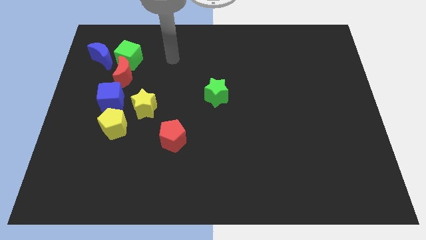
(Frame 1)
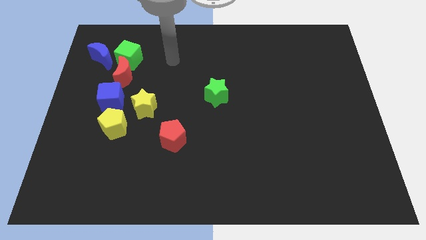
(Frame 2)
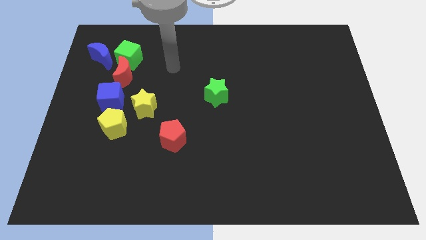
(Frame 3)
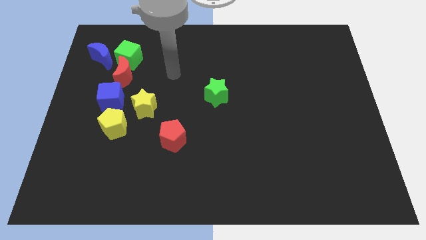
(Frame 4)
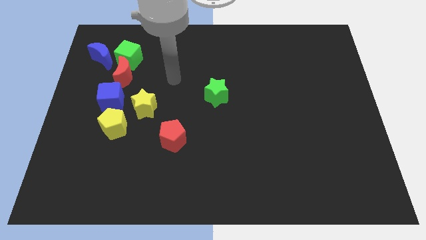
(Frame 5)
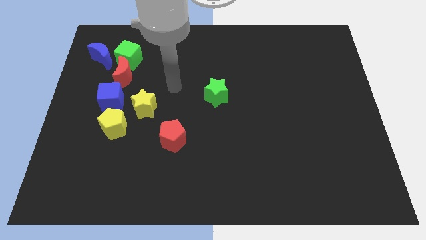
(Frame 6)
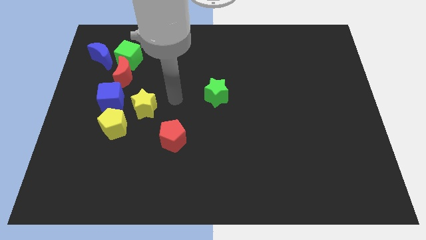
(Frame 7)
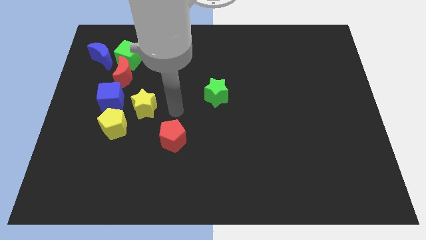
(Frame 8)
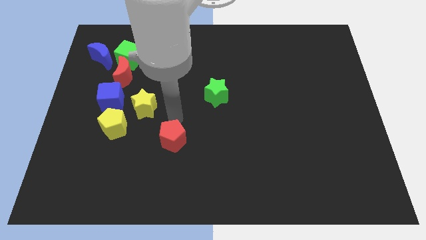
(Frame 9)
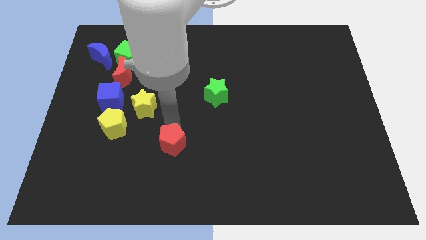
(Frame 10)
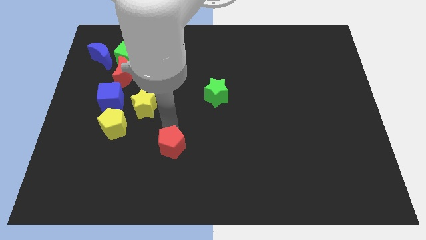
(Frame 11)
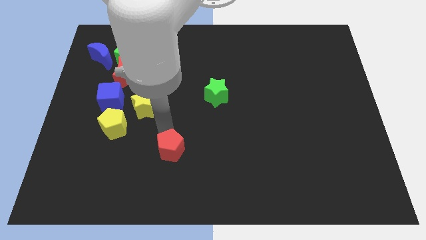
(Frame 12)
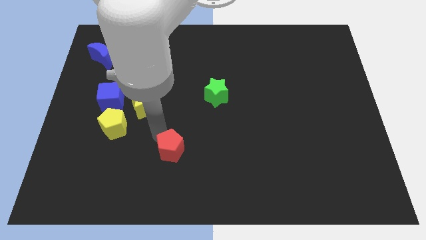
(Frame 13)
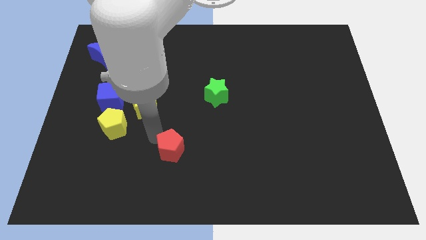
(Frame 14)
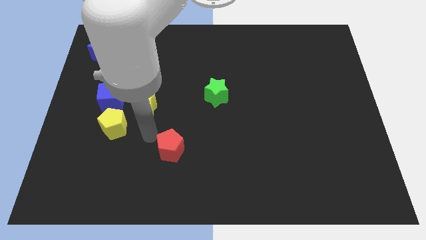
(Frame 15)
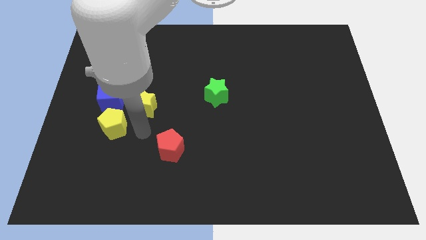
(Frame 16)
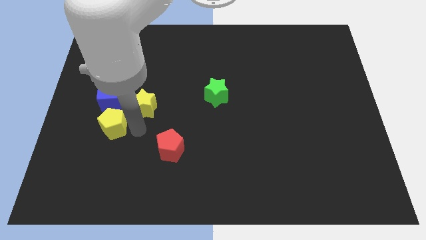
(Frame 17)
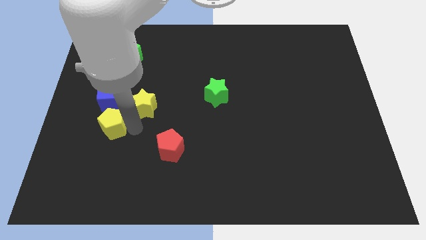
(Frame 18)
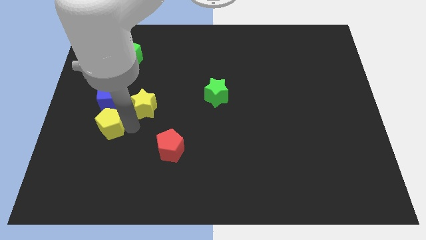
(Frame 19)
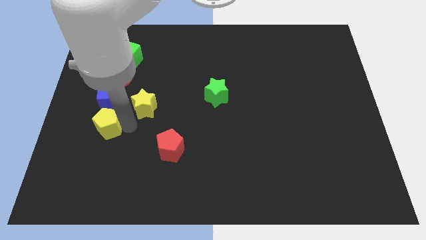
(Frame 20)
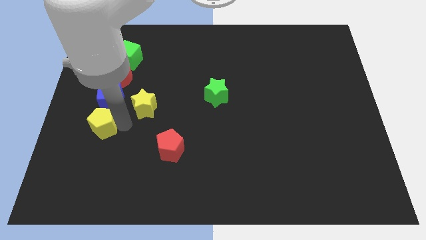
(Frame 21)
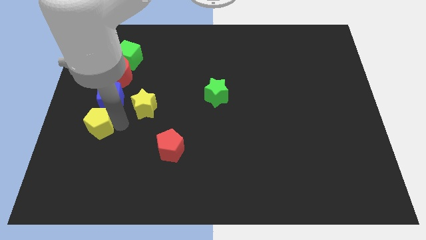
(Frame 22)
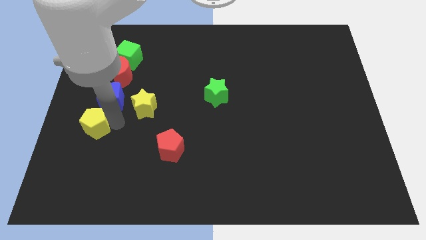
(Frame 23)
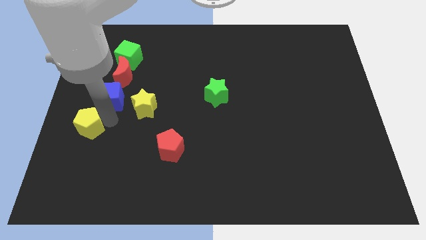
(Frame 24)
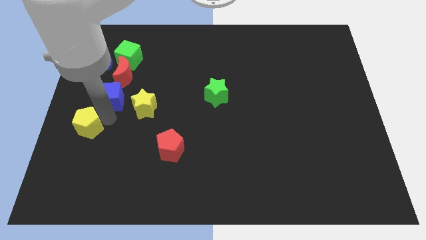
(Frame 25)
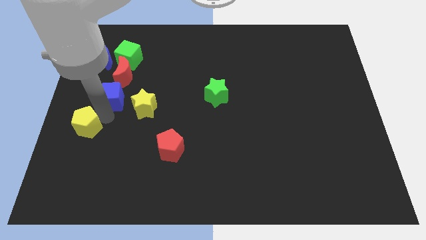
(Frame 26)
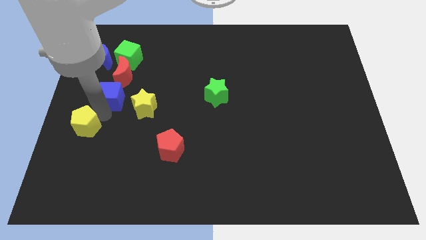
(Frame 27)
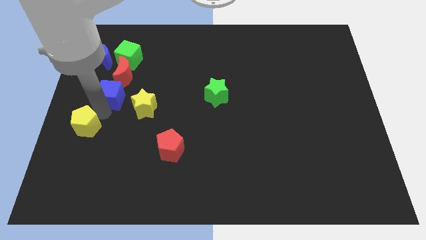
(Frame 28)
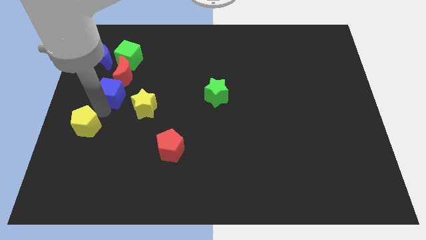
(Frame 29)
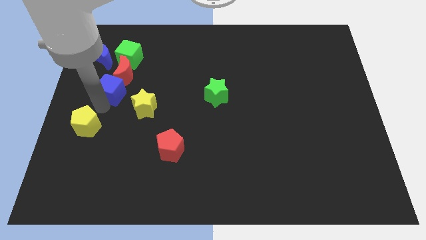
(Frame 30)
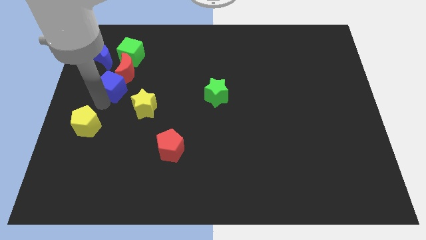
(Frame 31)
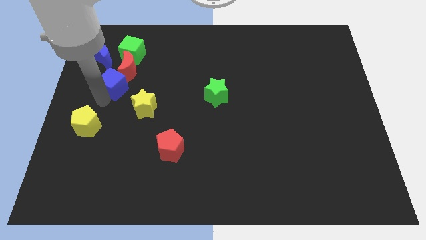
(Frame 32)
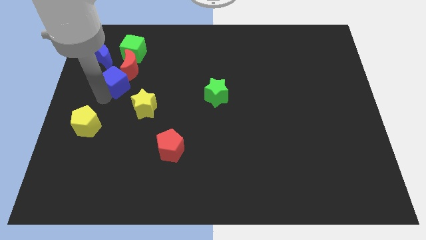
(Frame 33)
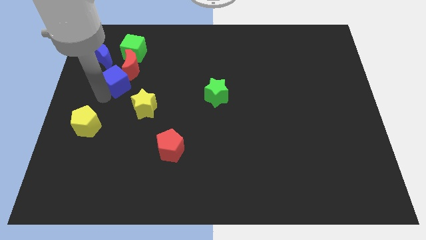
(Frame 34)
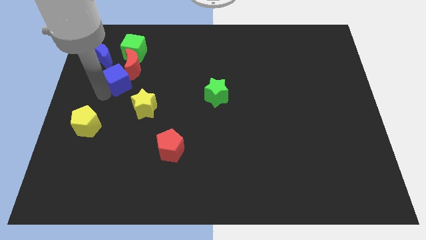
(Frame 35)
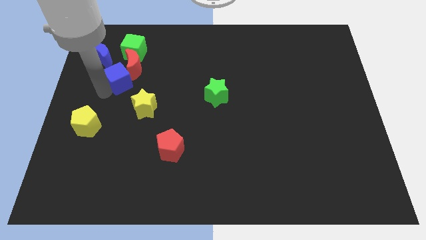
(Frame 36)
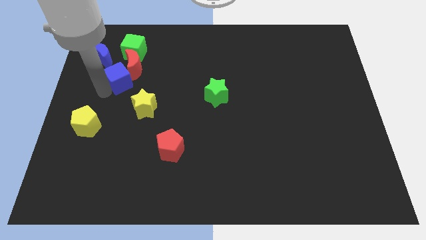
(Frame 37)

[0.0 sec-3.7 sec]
slide the blue cube to the red moon

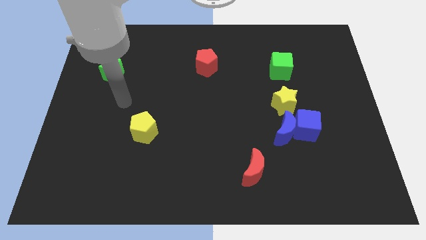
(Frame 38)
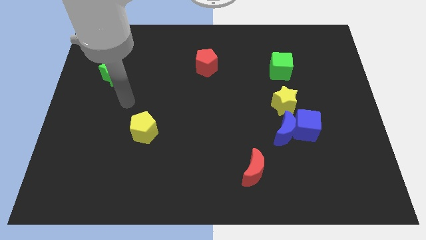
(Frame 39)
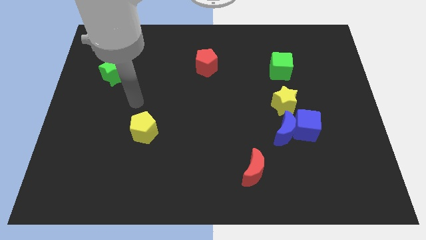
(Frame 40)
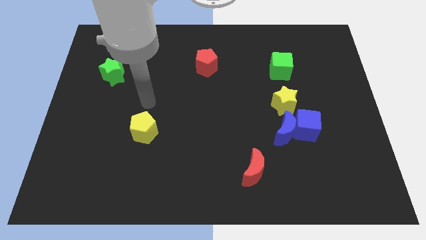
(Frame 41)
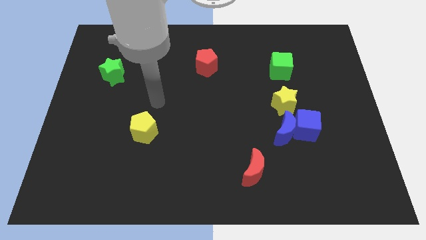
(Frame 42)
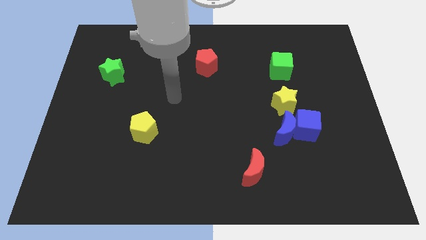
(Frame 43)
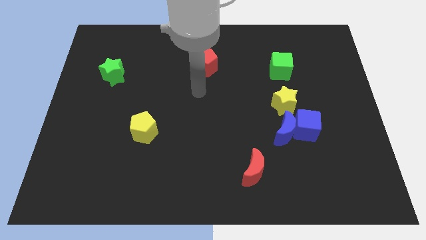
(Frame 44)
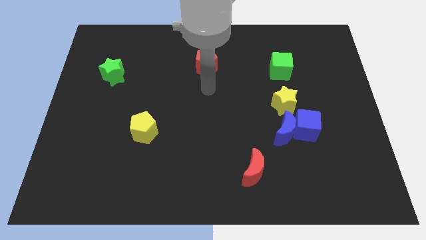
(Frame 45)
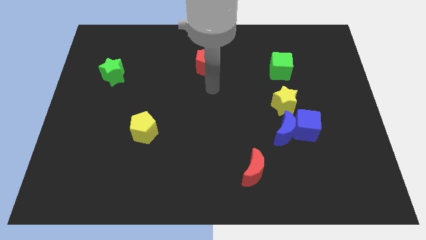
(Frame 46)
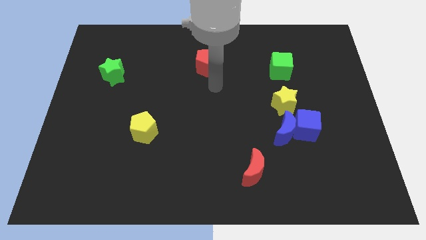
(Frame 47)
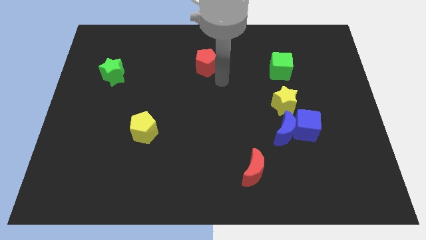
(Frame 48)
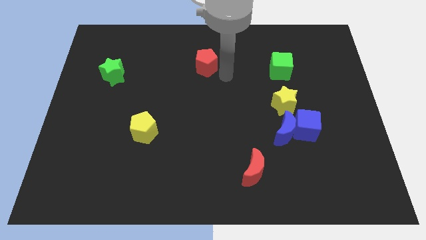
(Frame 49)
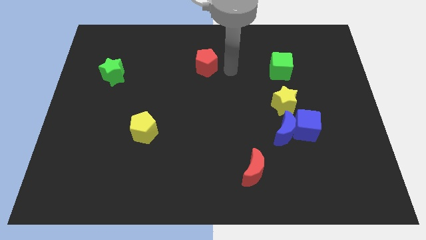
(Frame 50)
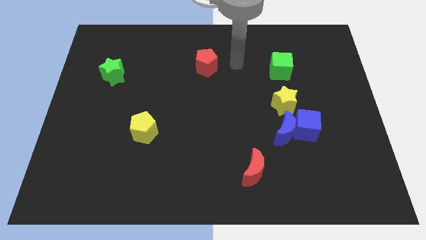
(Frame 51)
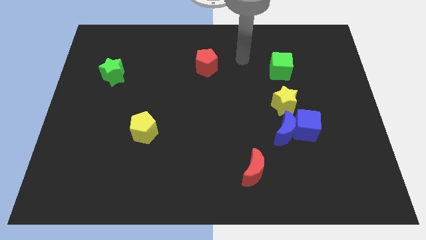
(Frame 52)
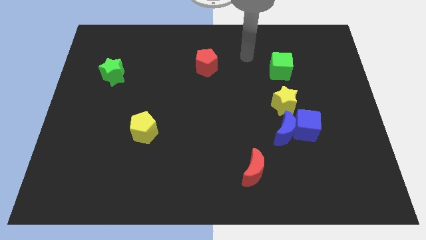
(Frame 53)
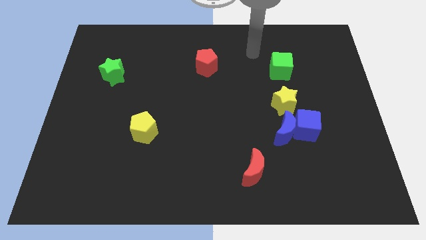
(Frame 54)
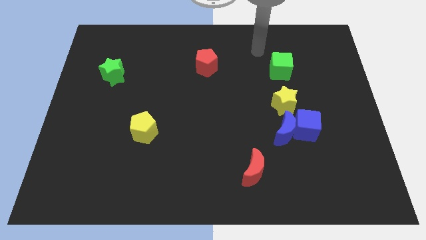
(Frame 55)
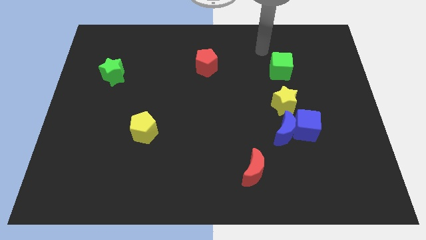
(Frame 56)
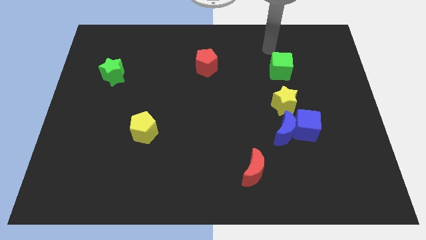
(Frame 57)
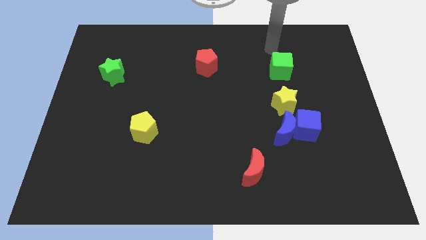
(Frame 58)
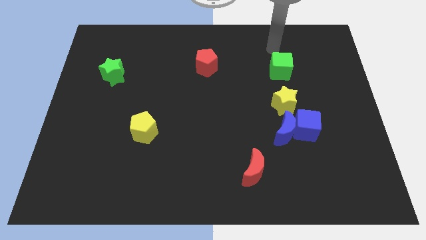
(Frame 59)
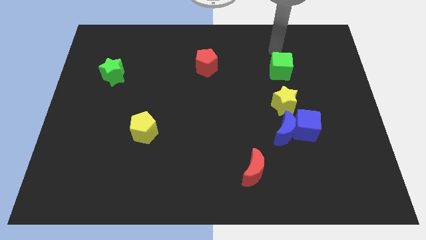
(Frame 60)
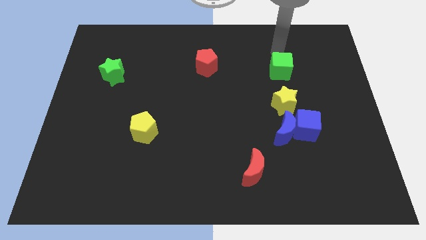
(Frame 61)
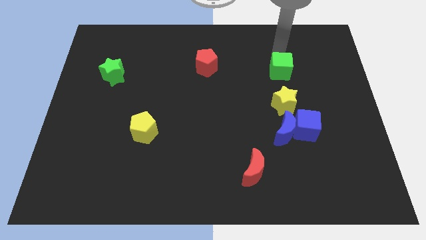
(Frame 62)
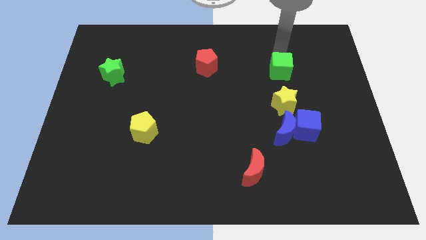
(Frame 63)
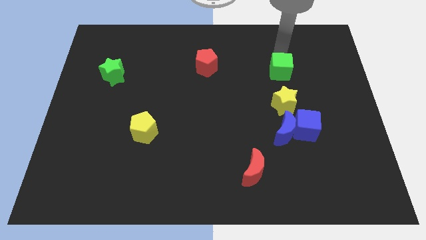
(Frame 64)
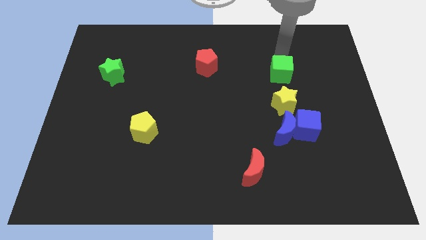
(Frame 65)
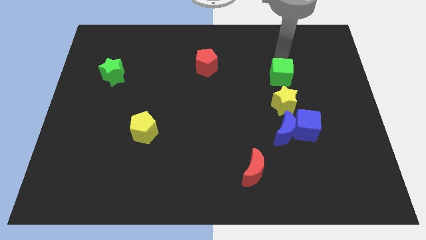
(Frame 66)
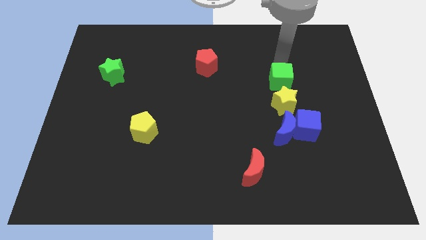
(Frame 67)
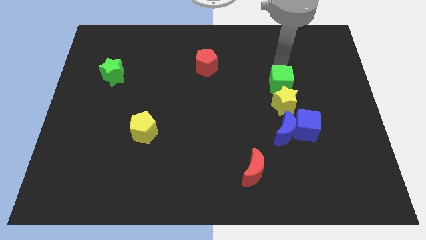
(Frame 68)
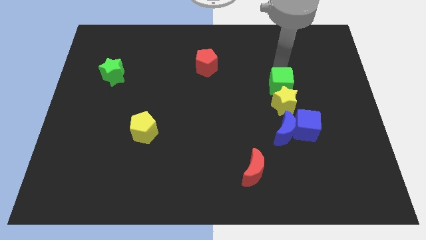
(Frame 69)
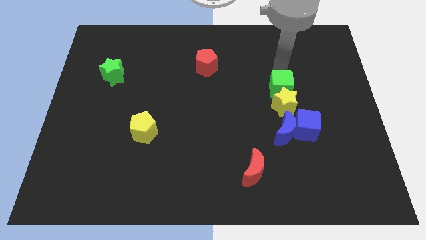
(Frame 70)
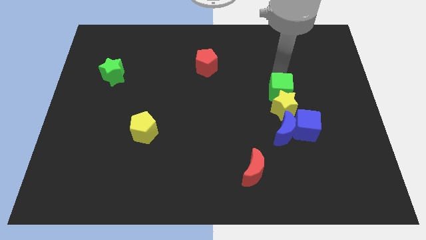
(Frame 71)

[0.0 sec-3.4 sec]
move the green cube close to the yellow star

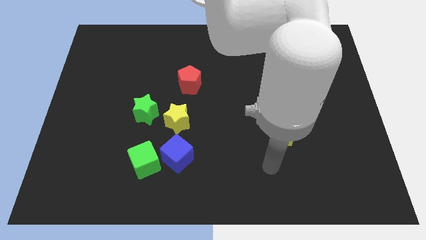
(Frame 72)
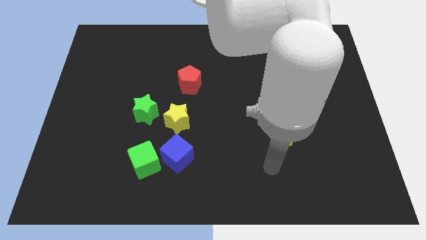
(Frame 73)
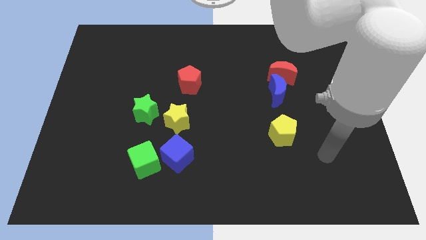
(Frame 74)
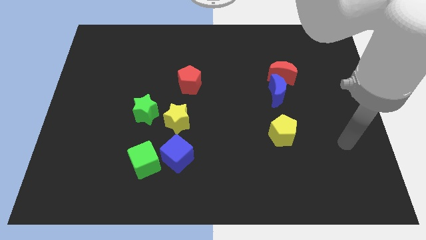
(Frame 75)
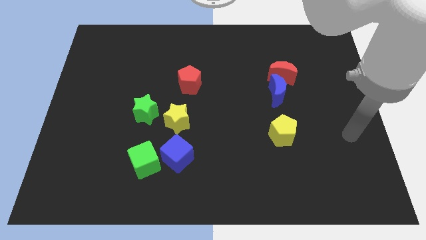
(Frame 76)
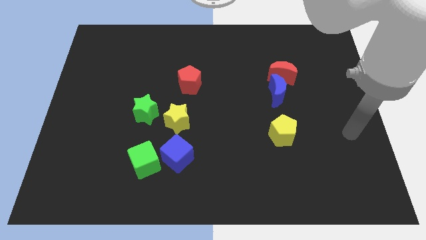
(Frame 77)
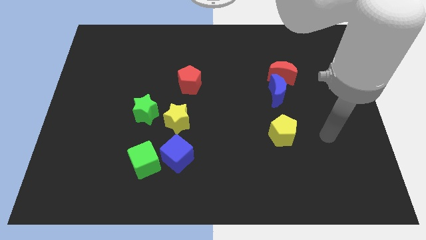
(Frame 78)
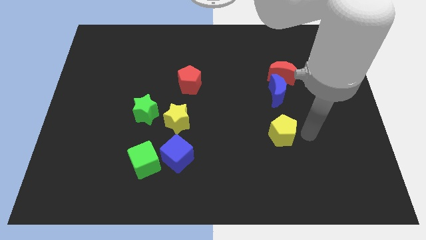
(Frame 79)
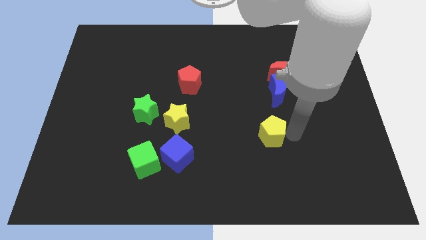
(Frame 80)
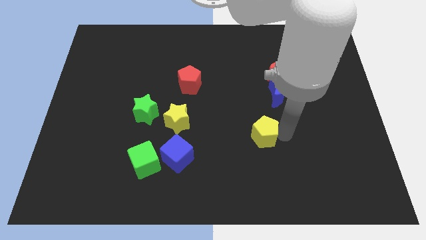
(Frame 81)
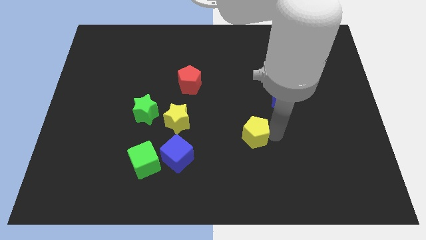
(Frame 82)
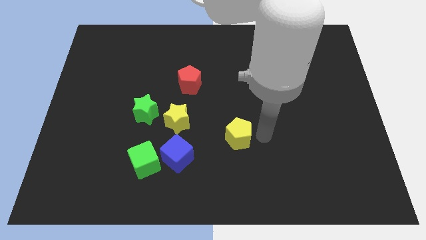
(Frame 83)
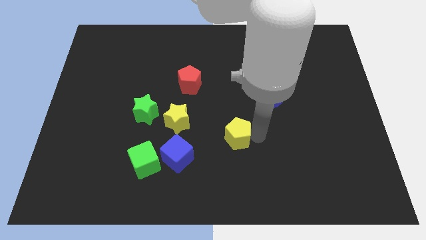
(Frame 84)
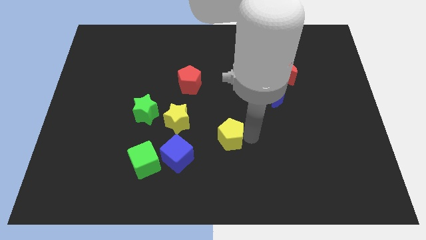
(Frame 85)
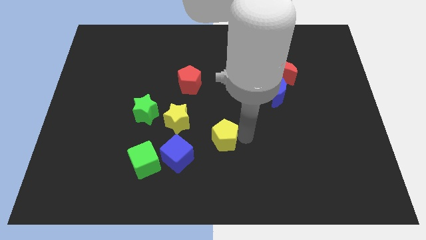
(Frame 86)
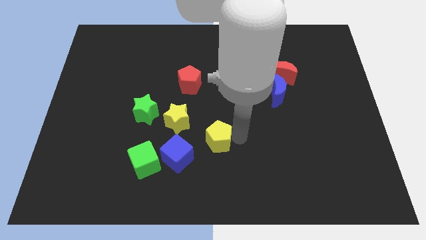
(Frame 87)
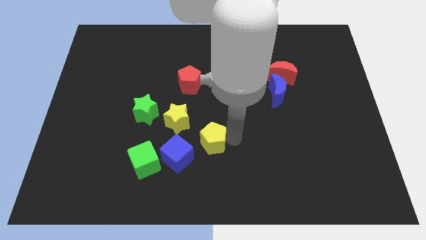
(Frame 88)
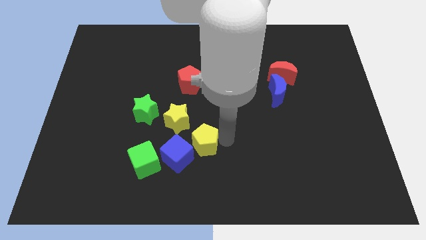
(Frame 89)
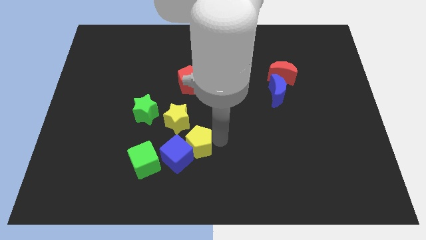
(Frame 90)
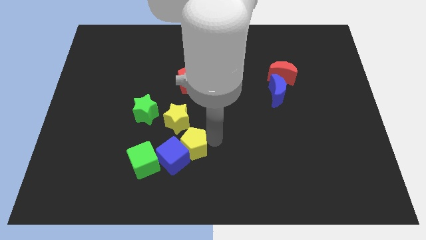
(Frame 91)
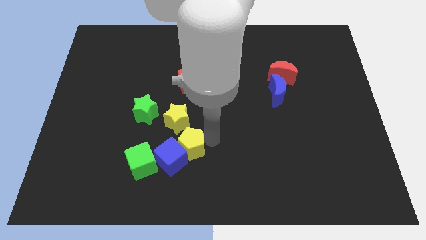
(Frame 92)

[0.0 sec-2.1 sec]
slide the yellow pentagon next to the blue cube
